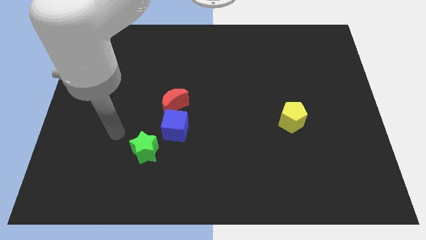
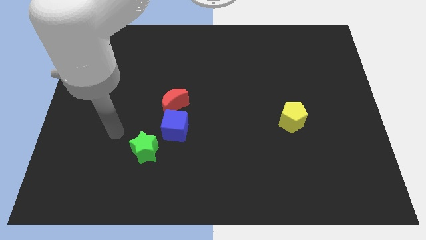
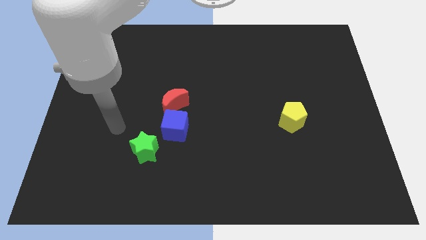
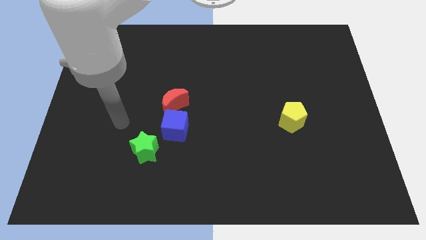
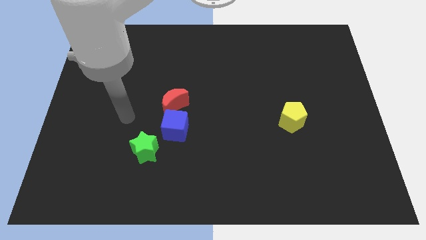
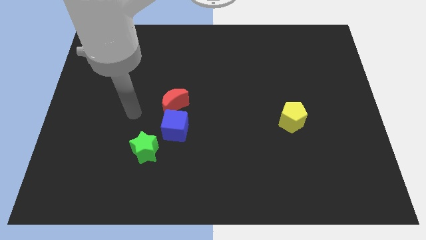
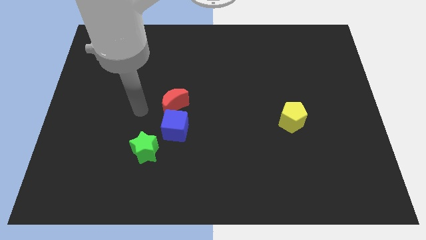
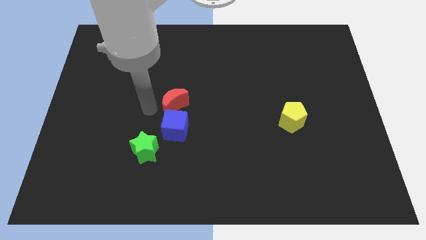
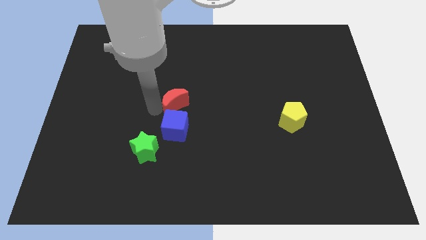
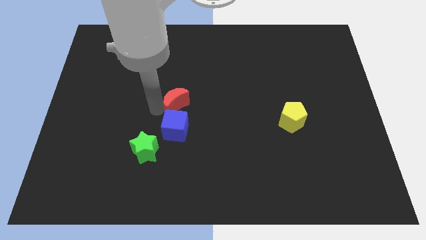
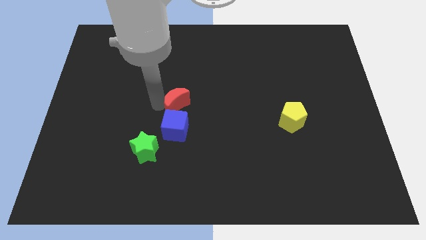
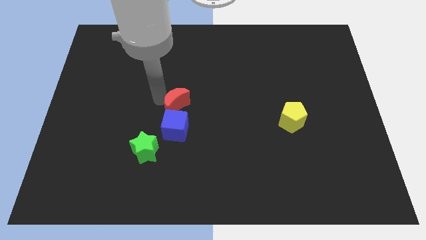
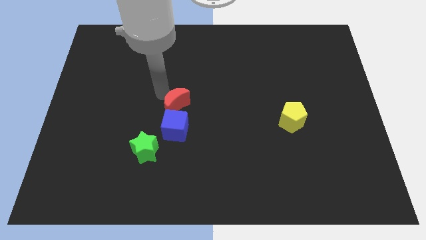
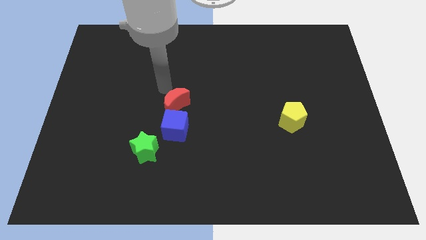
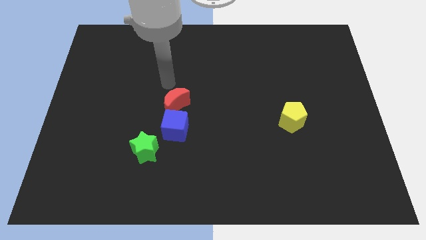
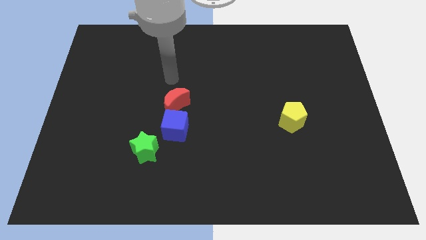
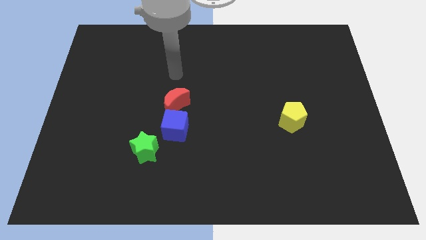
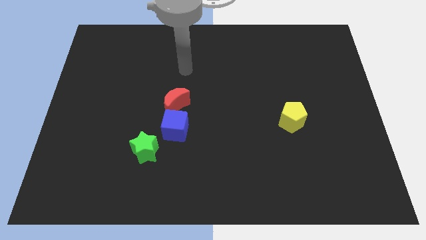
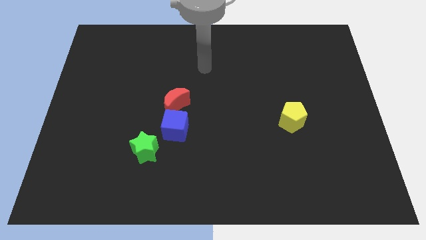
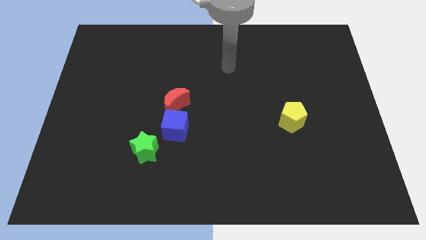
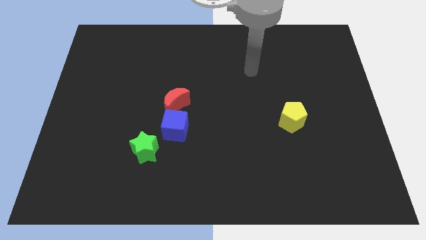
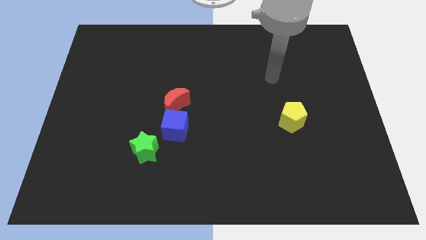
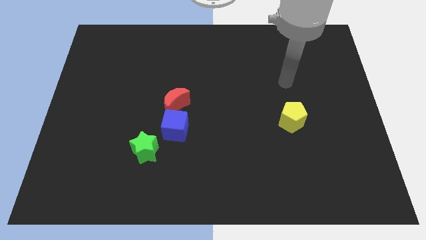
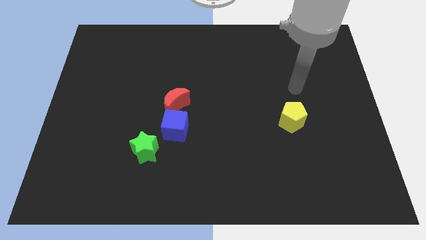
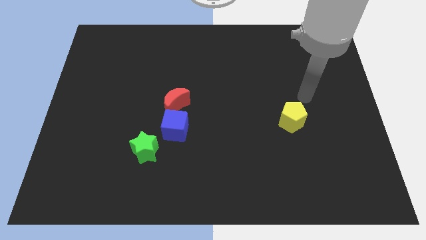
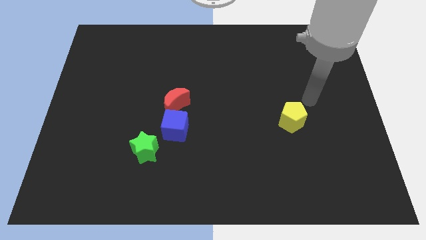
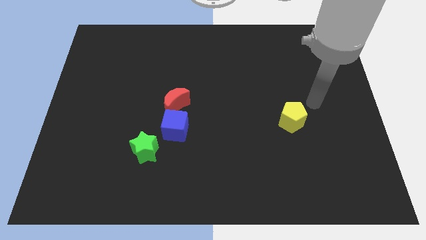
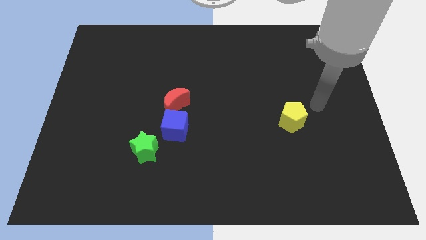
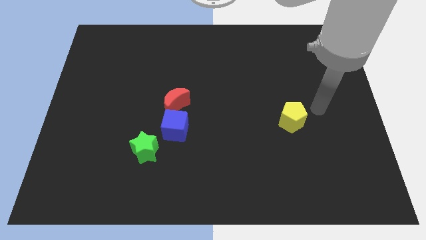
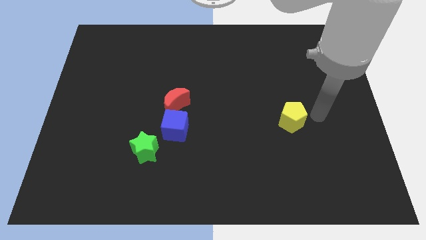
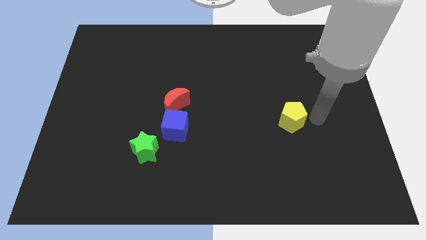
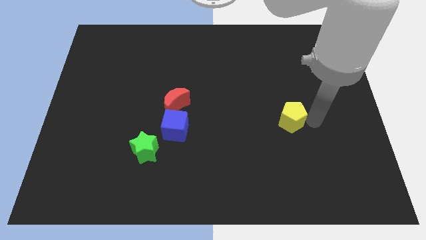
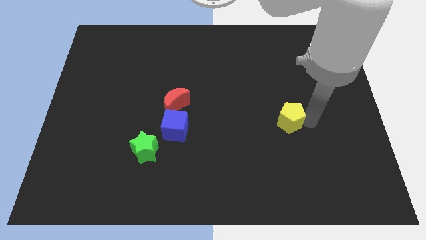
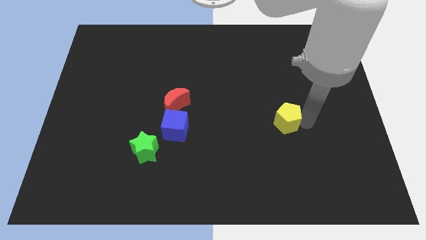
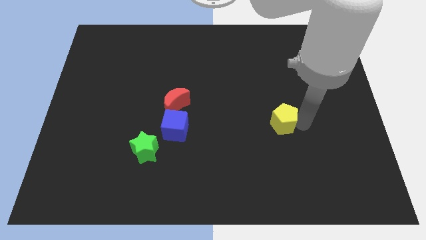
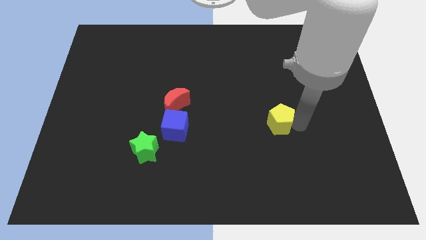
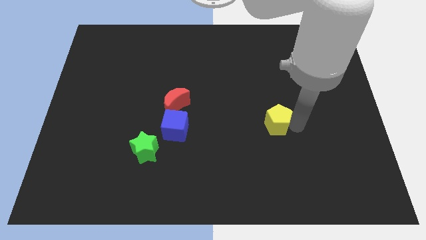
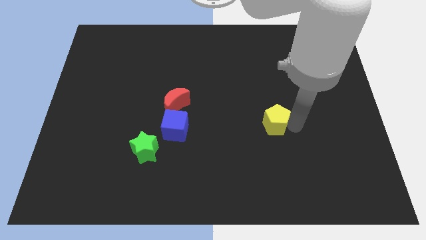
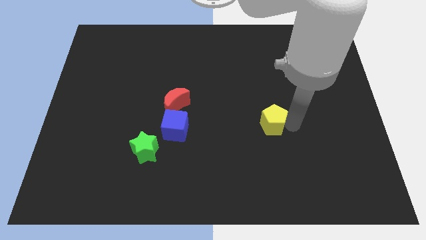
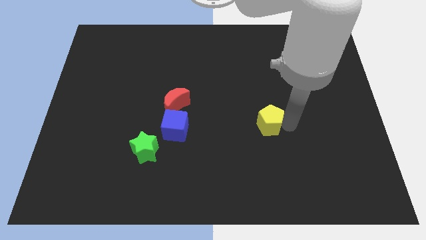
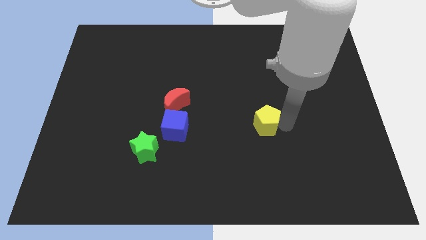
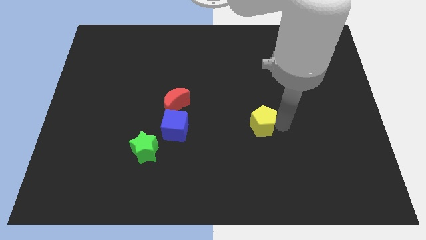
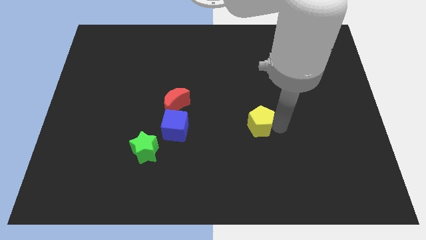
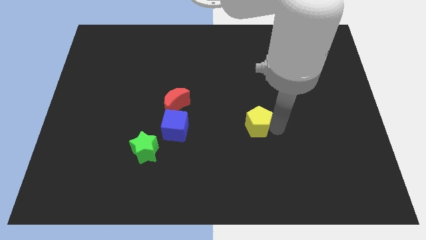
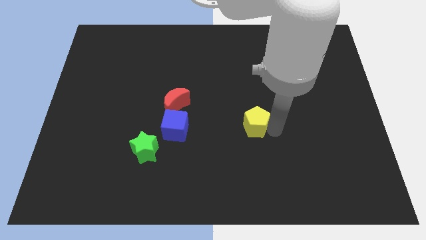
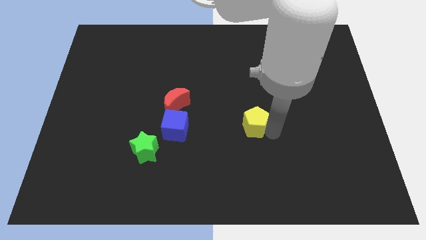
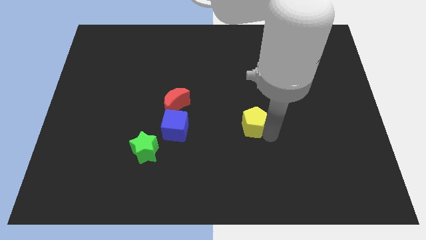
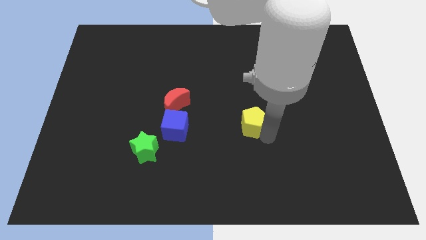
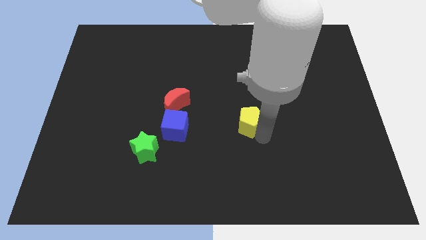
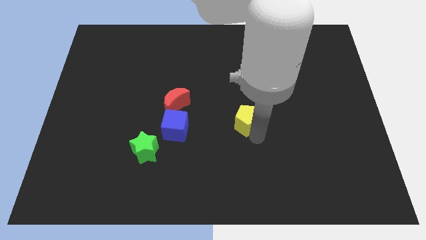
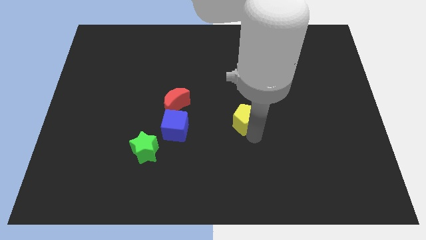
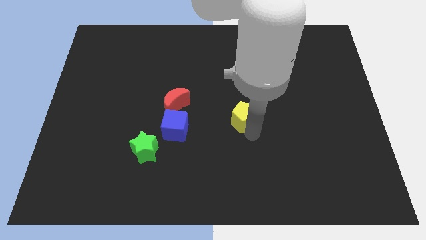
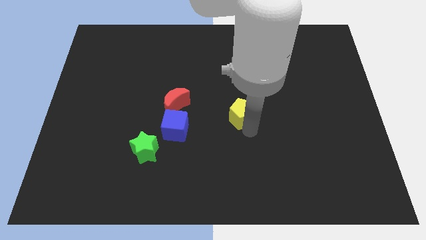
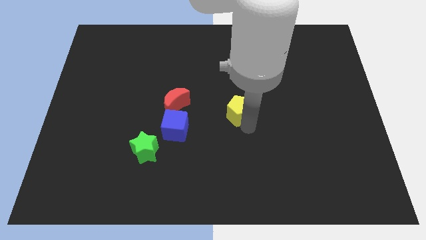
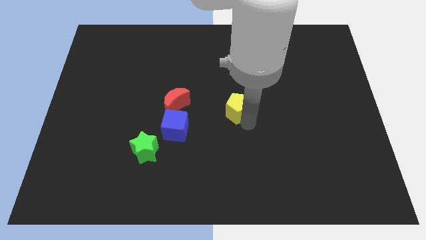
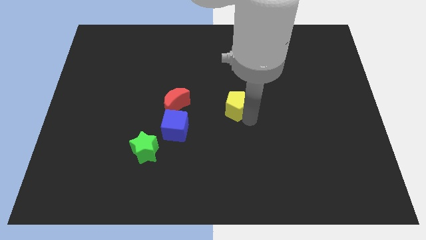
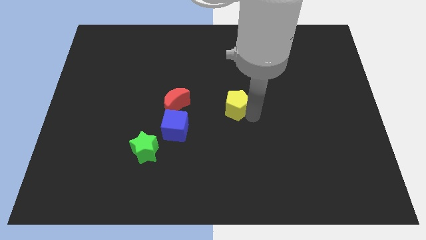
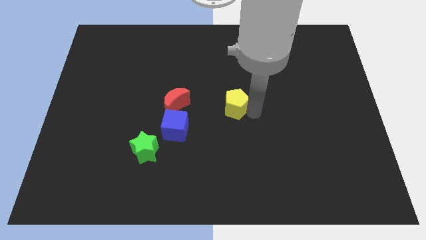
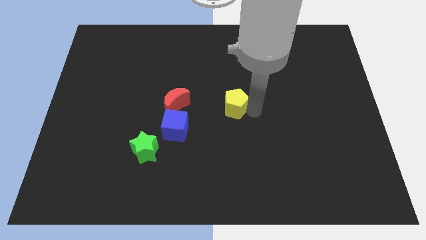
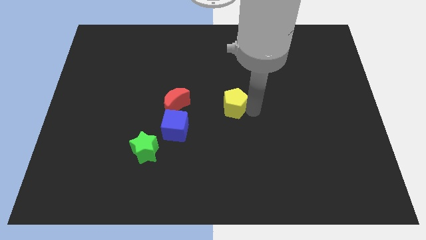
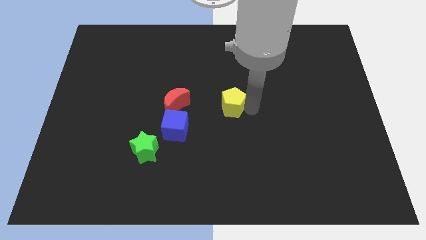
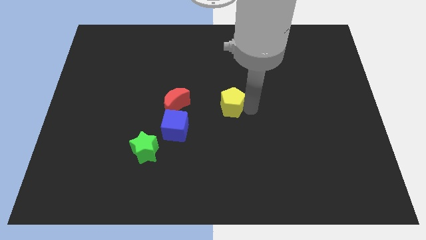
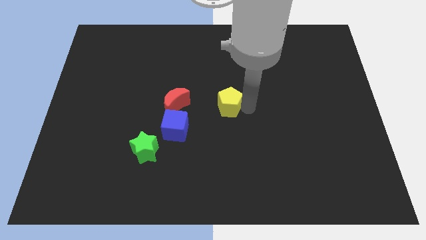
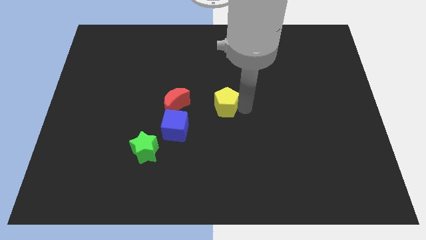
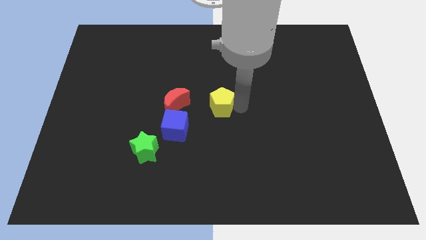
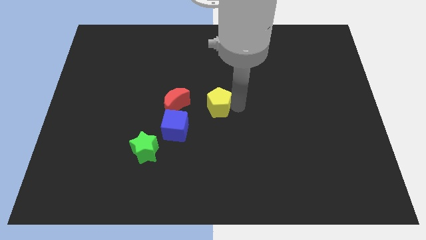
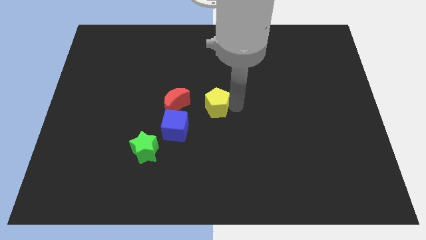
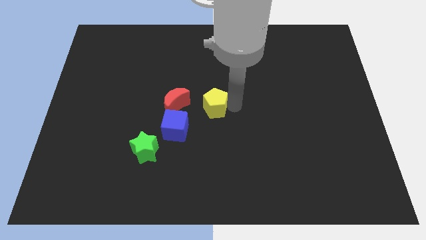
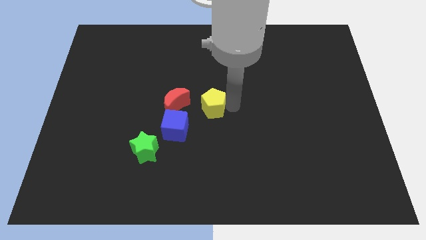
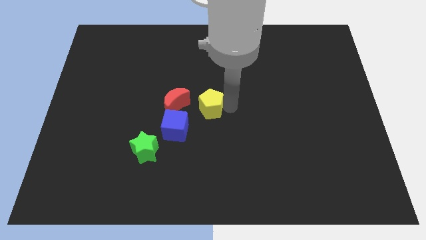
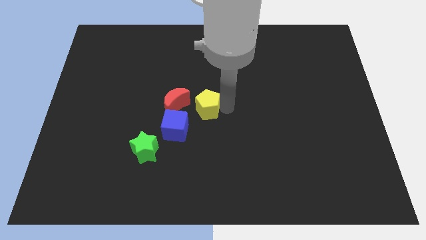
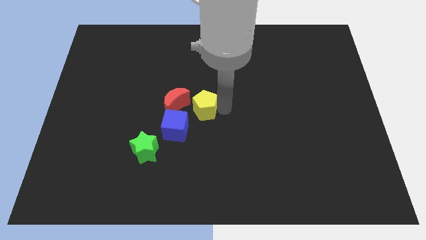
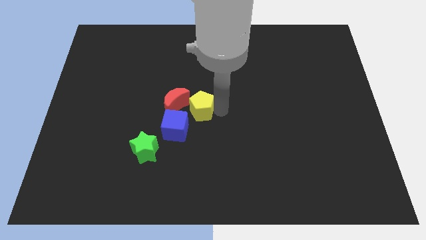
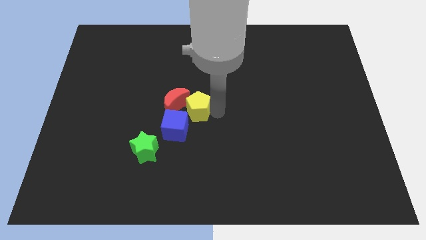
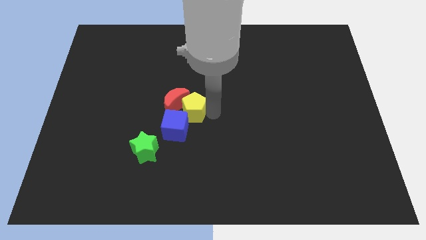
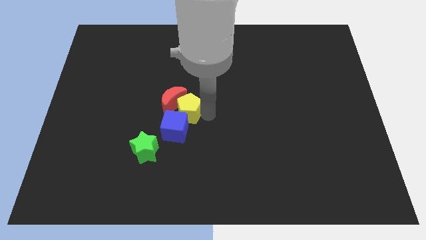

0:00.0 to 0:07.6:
slide the pentagon close to the red moon

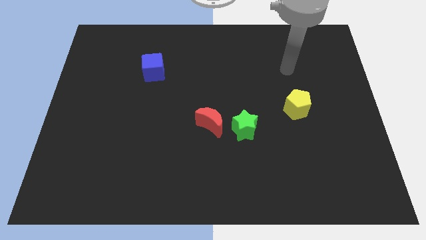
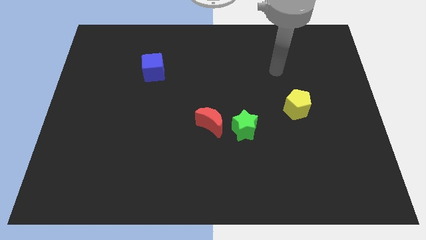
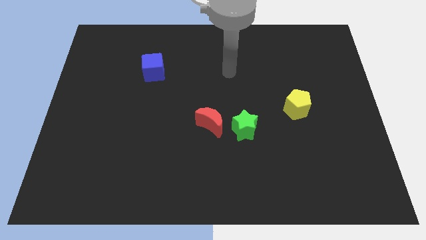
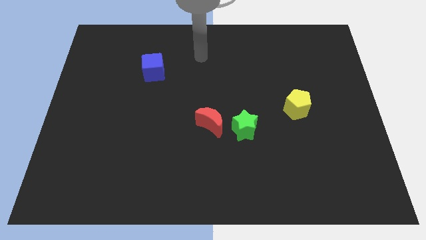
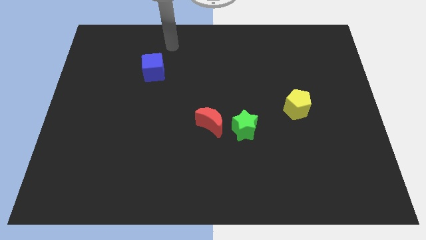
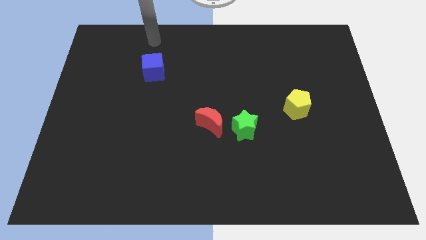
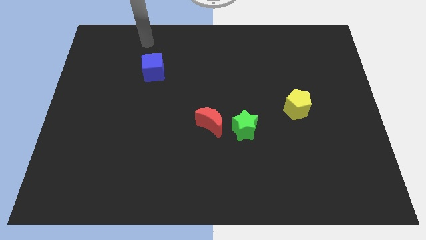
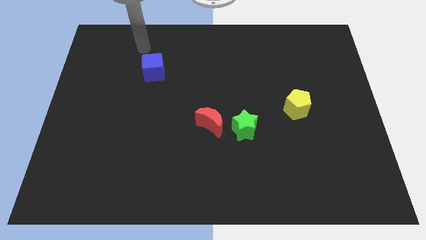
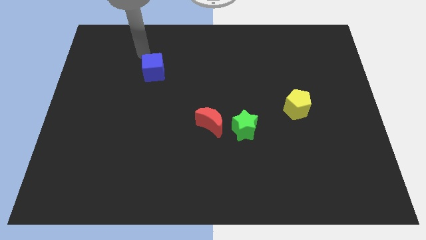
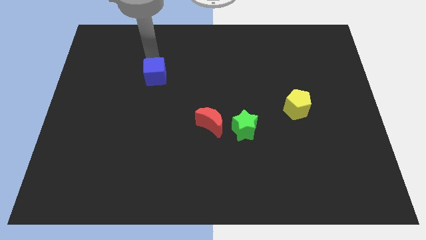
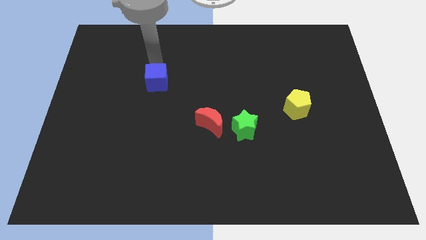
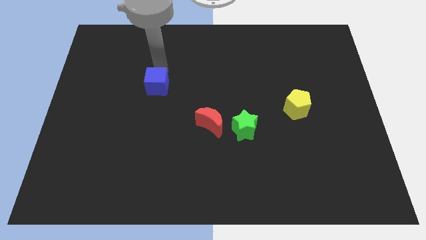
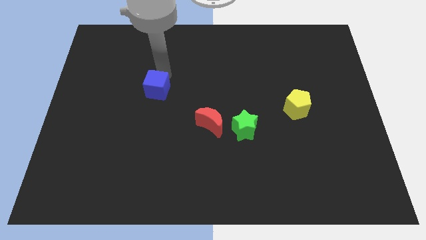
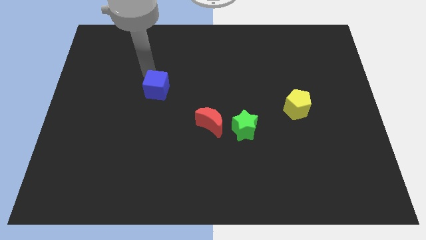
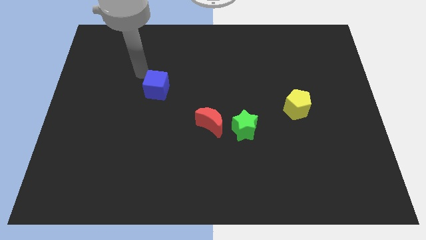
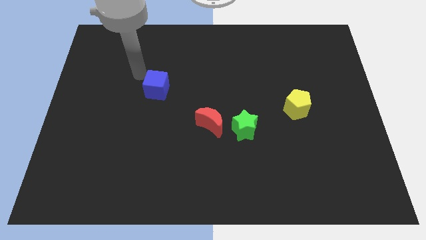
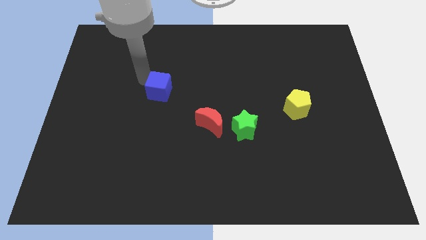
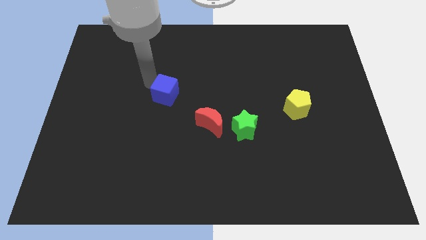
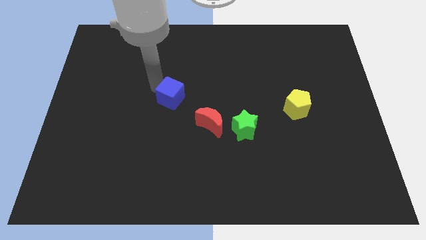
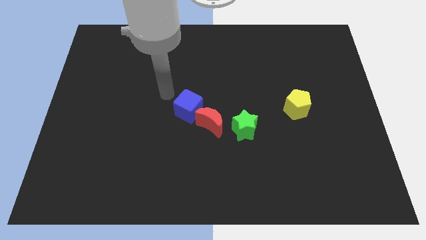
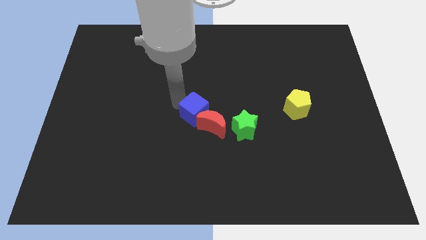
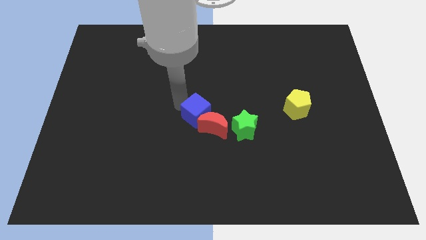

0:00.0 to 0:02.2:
put the cube close to the red moon
